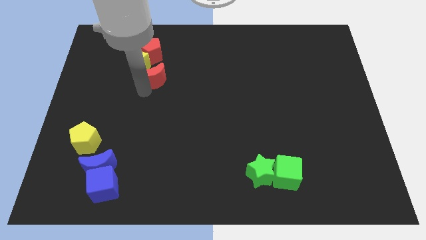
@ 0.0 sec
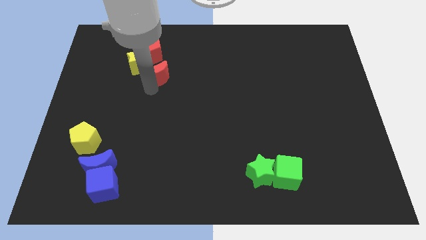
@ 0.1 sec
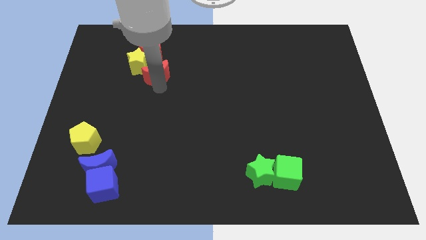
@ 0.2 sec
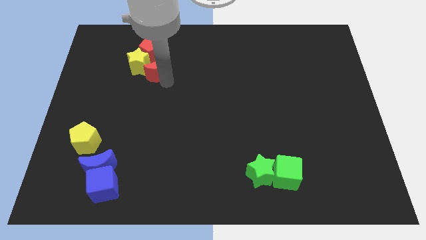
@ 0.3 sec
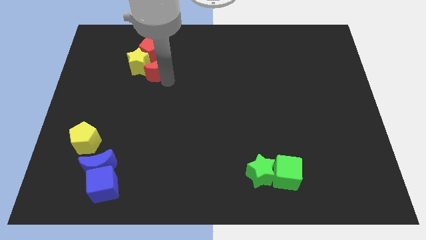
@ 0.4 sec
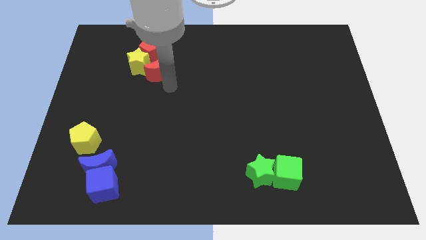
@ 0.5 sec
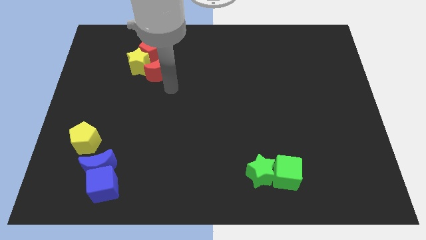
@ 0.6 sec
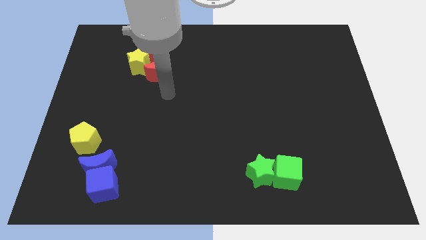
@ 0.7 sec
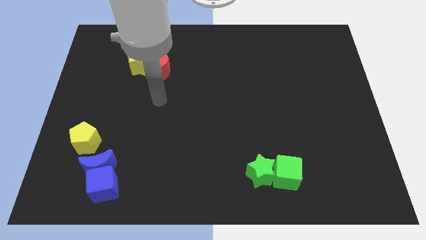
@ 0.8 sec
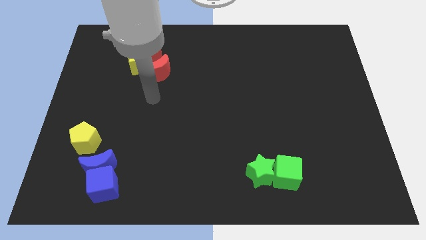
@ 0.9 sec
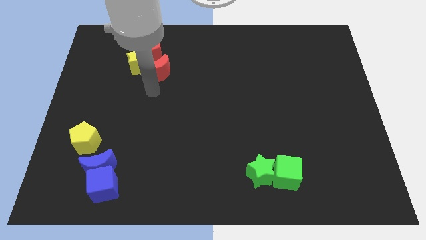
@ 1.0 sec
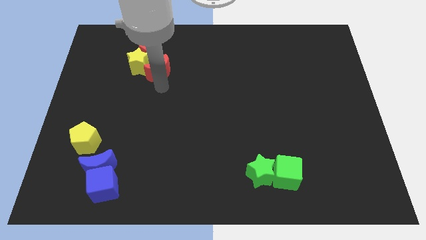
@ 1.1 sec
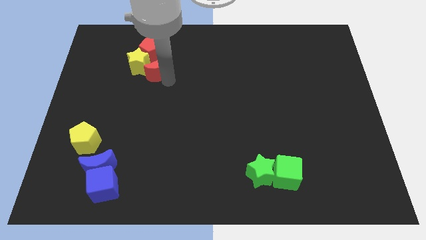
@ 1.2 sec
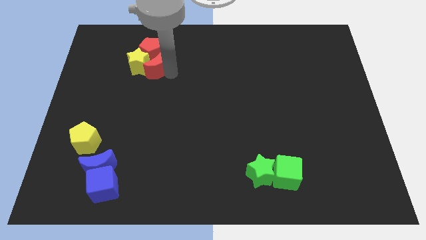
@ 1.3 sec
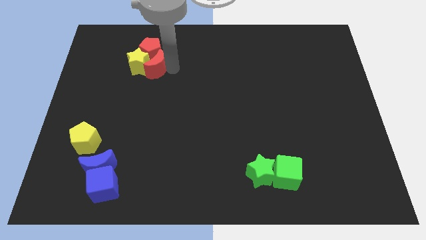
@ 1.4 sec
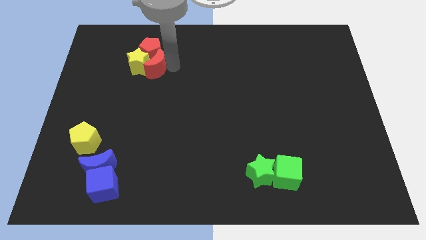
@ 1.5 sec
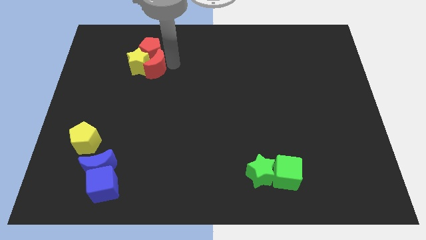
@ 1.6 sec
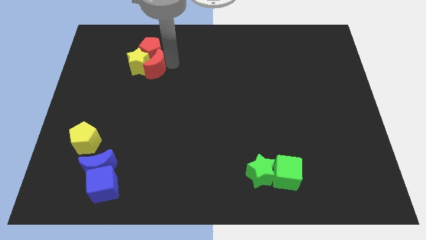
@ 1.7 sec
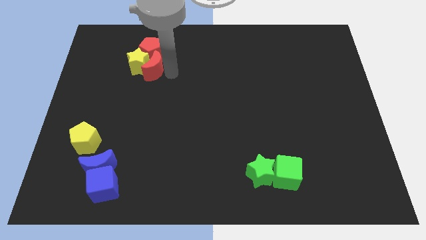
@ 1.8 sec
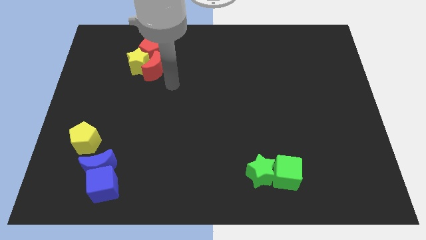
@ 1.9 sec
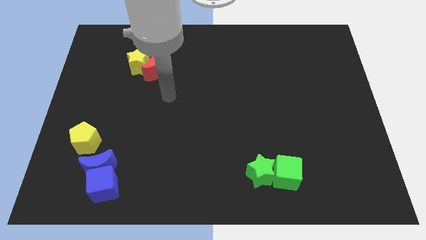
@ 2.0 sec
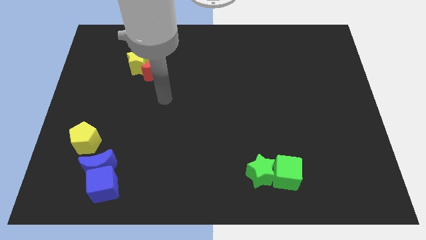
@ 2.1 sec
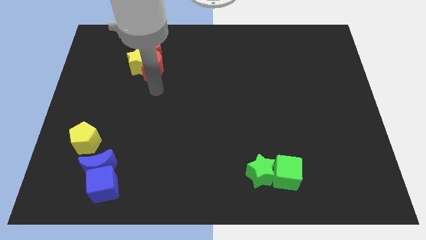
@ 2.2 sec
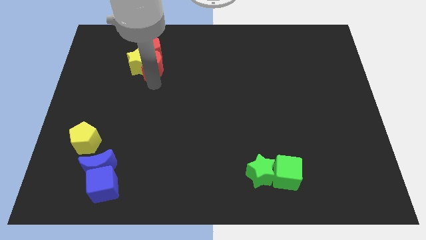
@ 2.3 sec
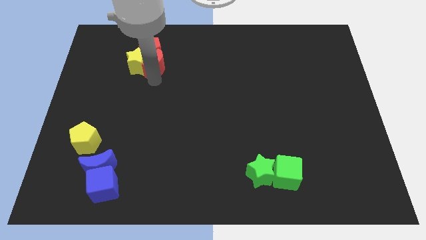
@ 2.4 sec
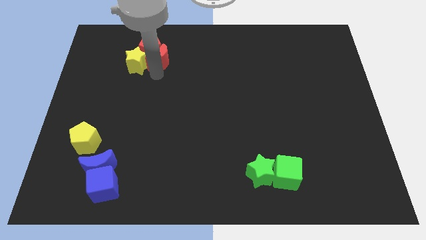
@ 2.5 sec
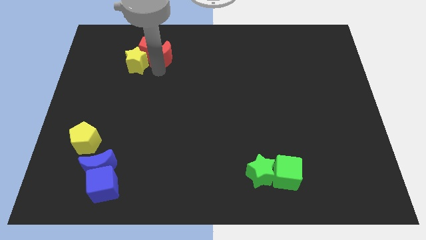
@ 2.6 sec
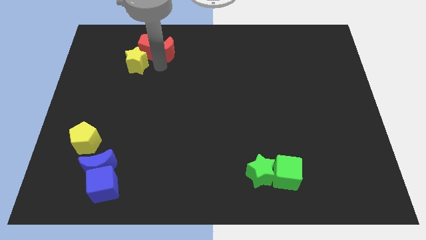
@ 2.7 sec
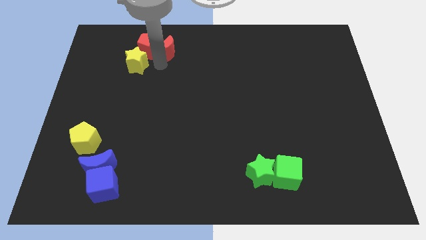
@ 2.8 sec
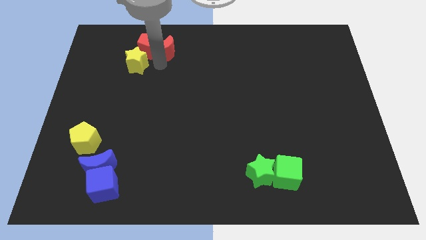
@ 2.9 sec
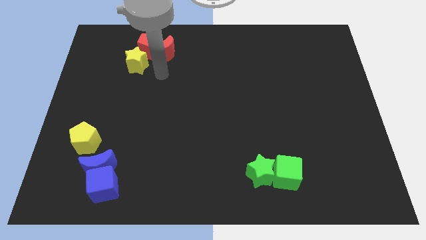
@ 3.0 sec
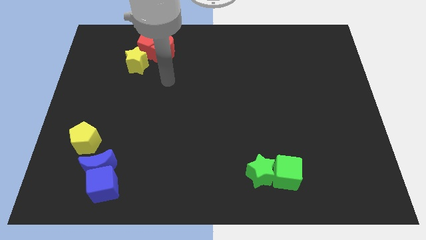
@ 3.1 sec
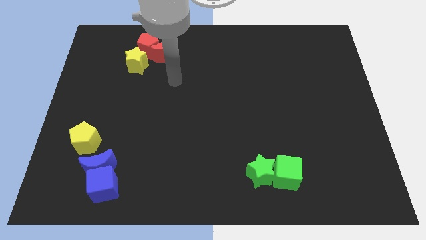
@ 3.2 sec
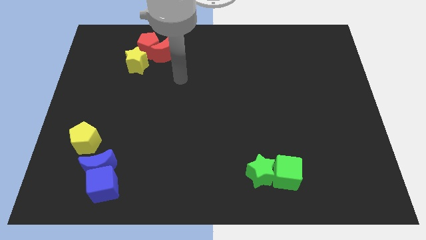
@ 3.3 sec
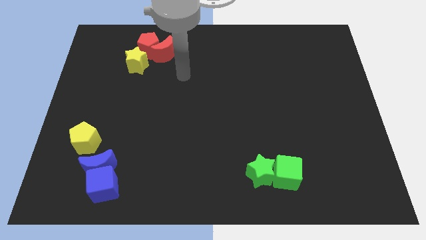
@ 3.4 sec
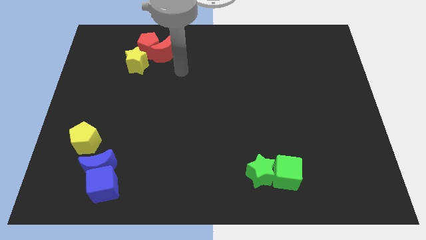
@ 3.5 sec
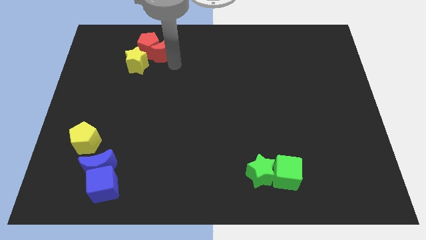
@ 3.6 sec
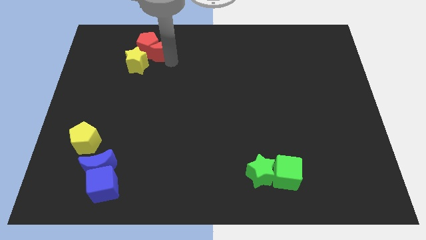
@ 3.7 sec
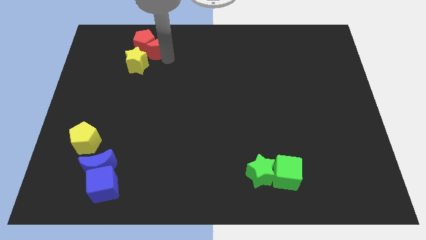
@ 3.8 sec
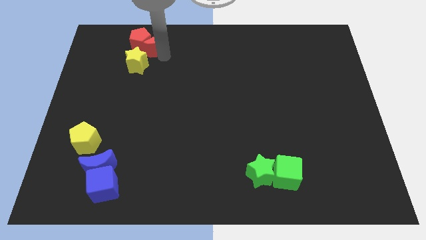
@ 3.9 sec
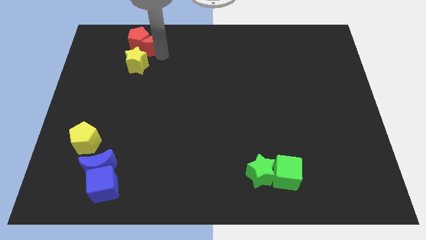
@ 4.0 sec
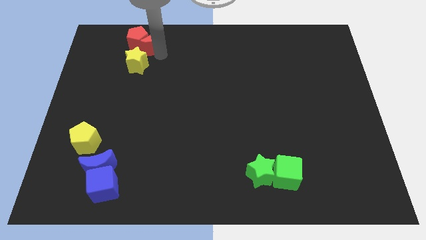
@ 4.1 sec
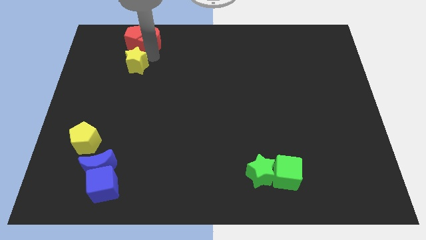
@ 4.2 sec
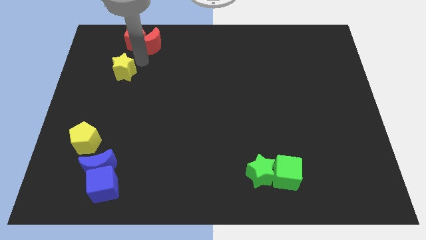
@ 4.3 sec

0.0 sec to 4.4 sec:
move the red crescent and red pentagon above the yellow star

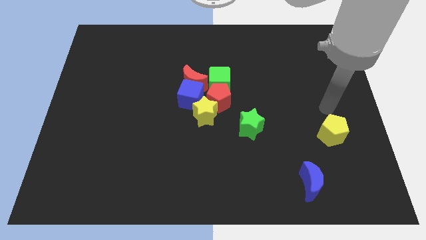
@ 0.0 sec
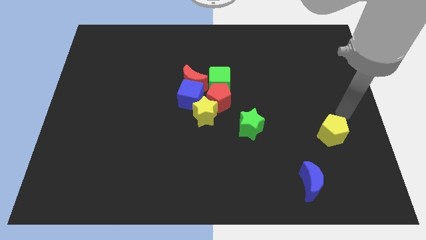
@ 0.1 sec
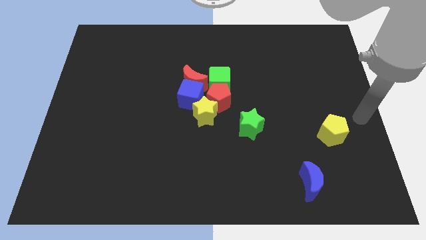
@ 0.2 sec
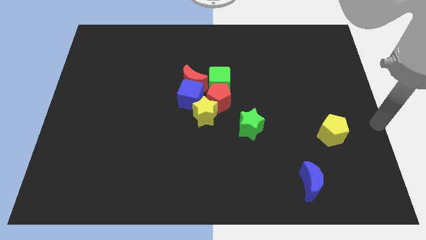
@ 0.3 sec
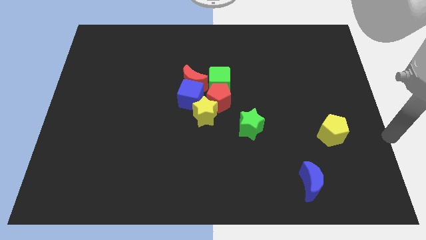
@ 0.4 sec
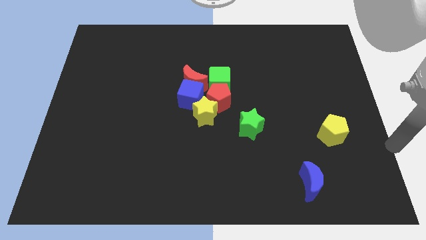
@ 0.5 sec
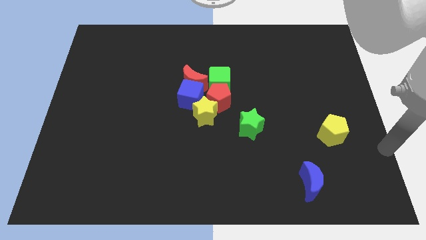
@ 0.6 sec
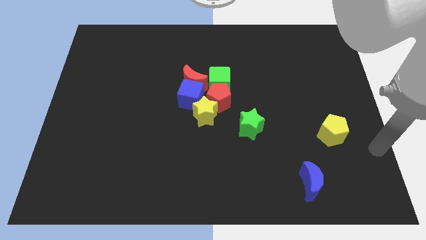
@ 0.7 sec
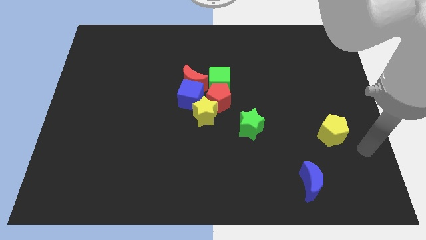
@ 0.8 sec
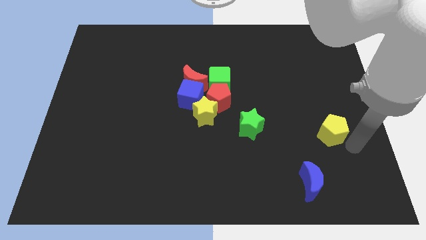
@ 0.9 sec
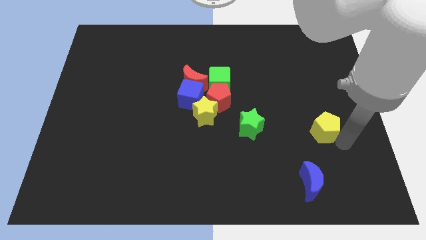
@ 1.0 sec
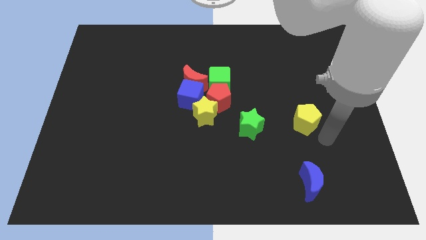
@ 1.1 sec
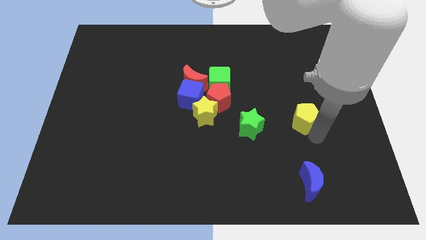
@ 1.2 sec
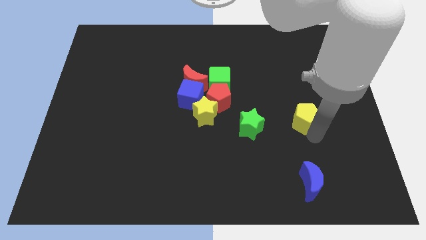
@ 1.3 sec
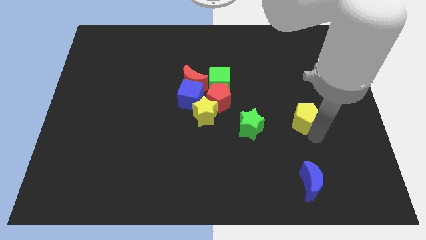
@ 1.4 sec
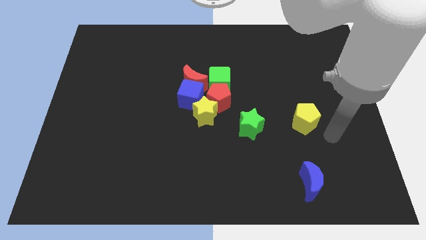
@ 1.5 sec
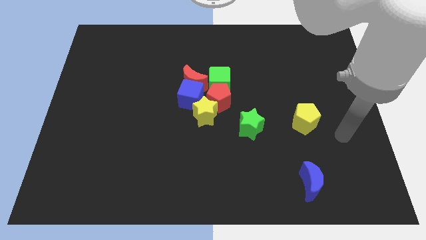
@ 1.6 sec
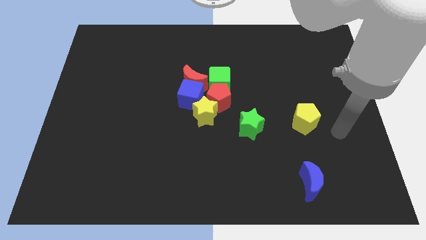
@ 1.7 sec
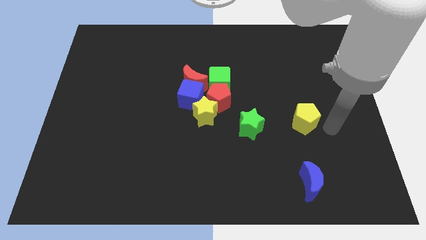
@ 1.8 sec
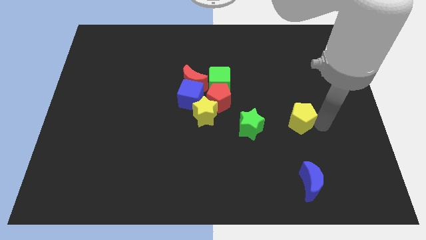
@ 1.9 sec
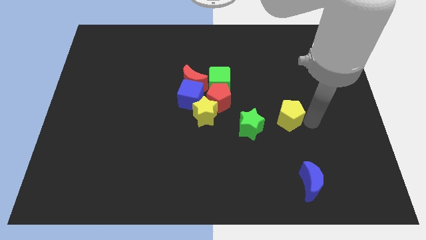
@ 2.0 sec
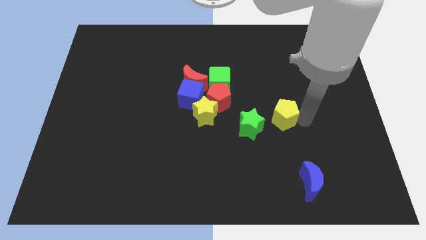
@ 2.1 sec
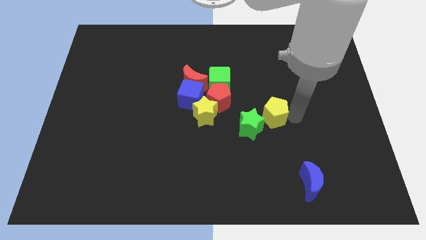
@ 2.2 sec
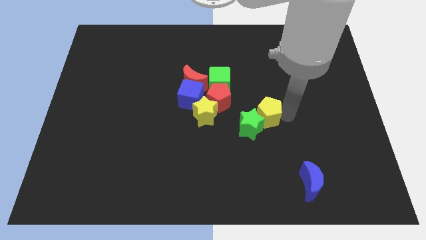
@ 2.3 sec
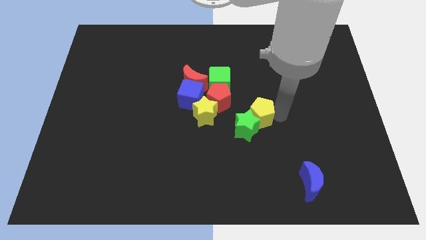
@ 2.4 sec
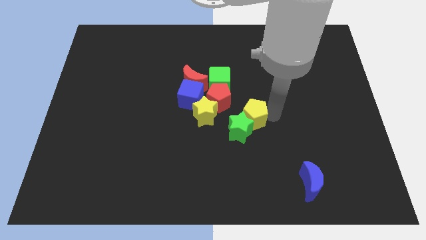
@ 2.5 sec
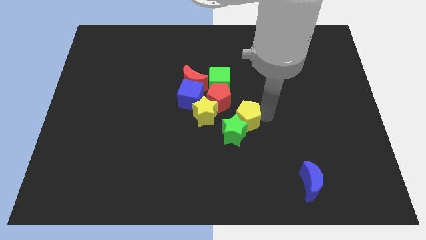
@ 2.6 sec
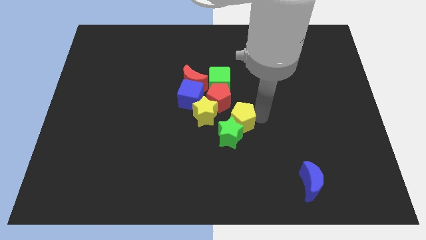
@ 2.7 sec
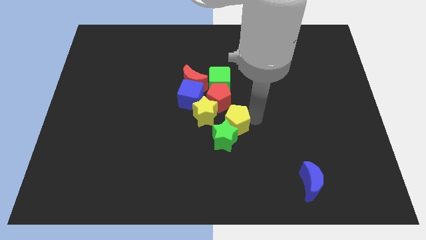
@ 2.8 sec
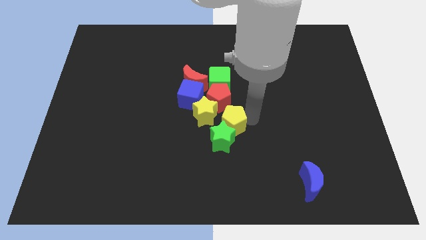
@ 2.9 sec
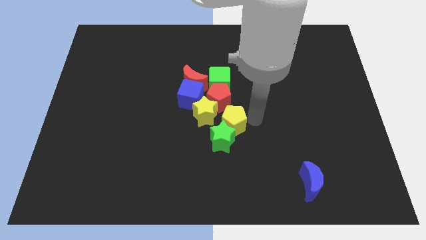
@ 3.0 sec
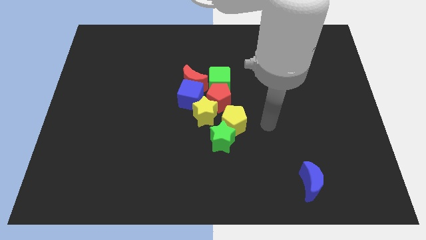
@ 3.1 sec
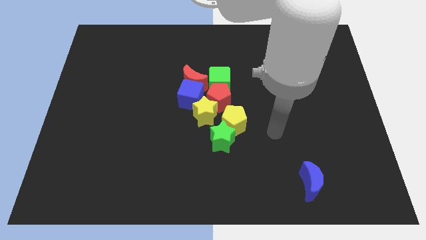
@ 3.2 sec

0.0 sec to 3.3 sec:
place the yellow pentagon diagonal to the yellow star

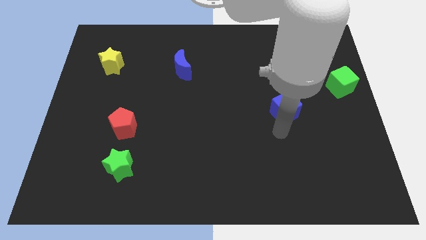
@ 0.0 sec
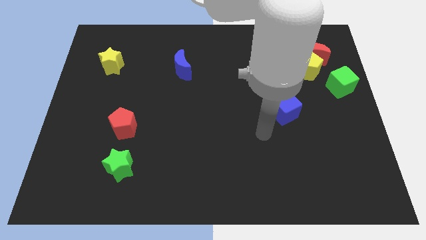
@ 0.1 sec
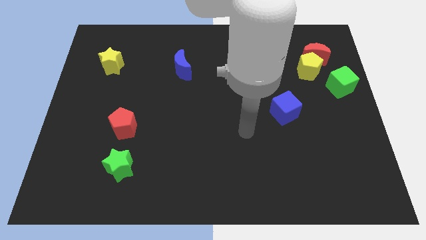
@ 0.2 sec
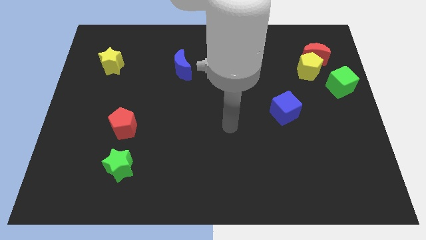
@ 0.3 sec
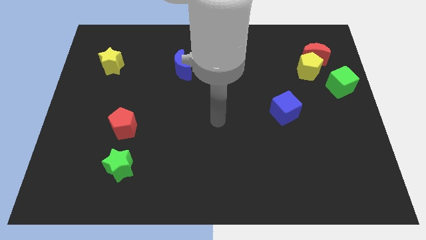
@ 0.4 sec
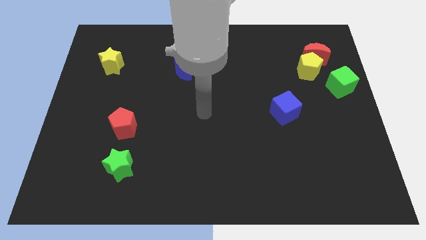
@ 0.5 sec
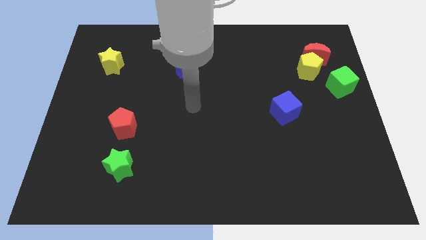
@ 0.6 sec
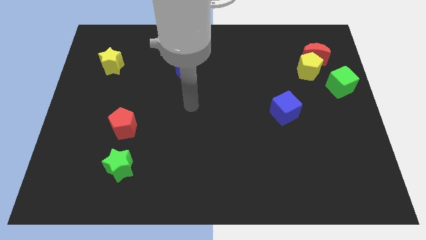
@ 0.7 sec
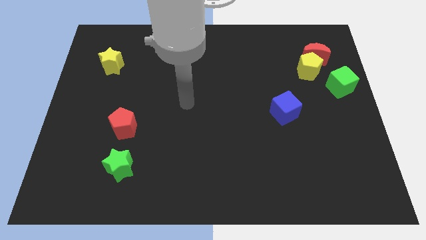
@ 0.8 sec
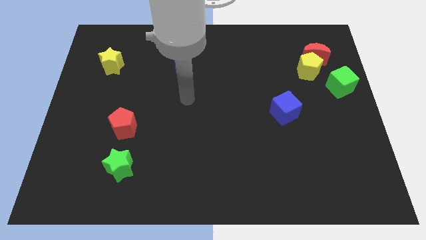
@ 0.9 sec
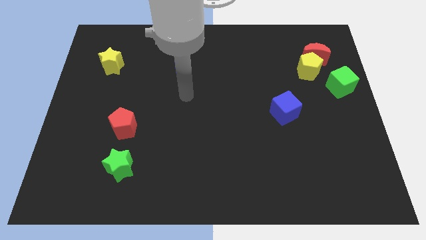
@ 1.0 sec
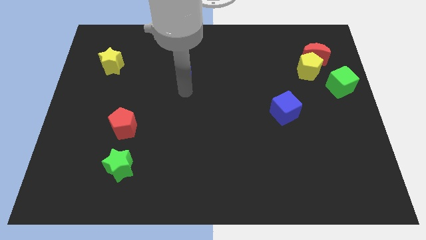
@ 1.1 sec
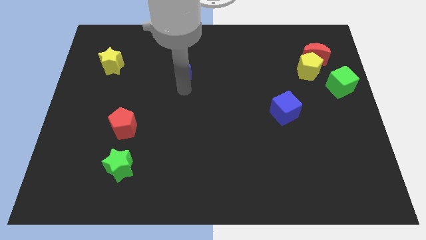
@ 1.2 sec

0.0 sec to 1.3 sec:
move your arm to the bottom side of the blue moon
